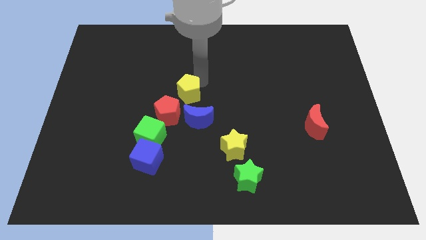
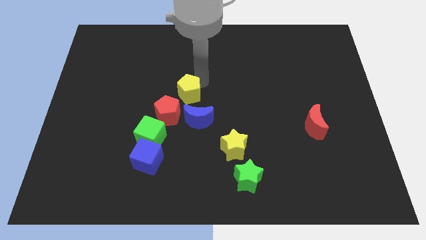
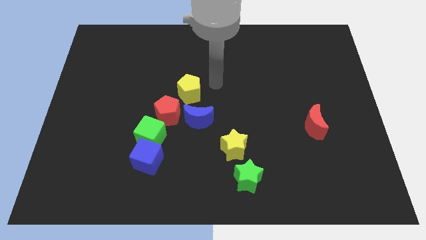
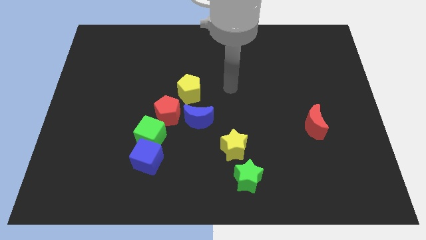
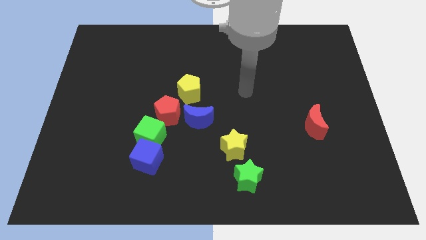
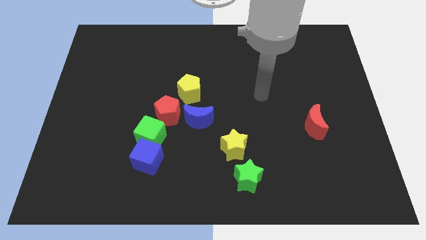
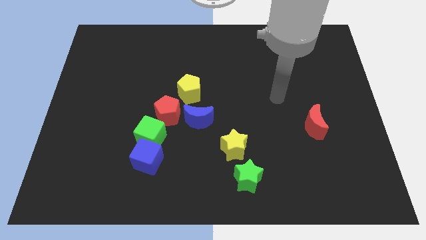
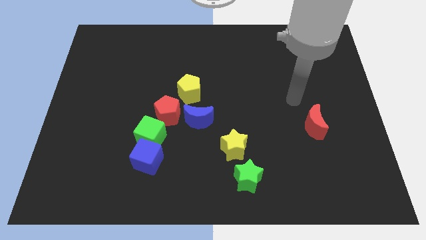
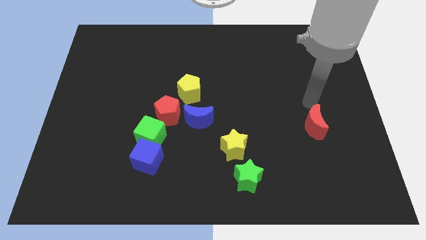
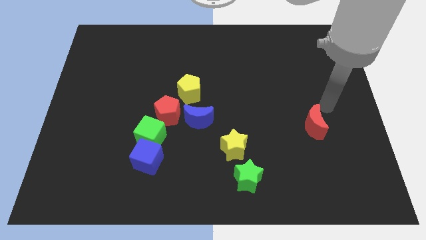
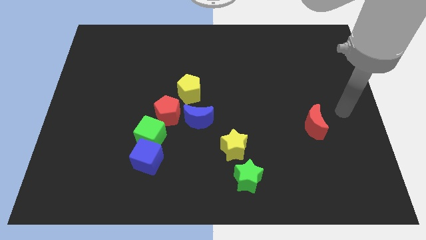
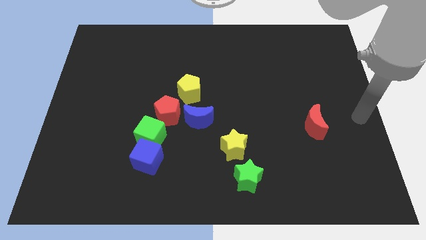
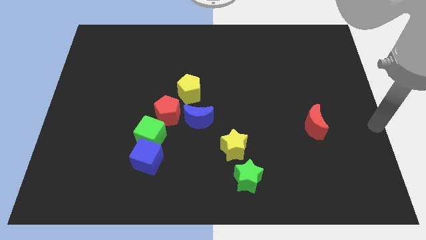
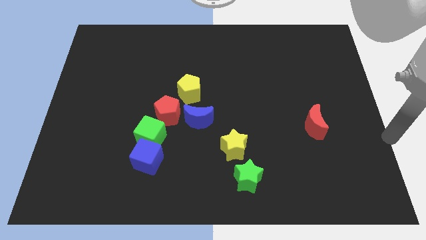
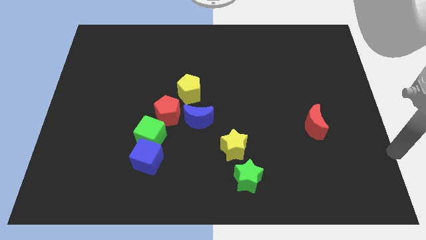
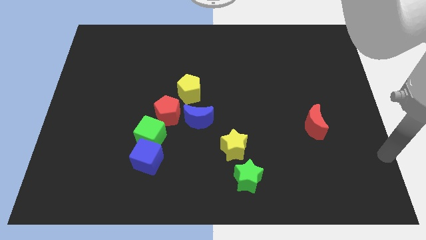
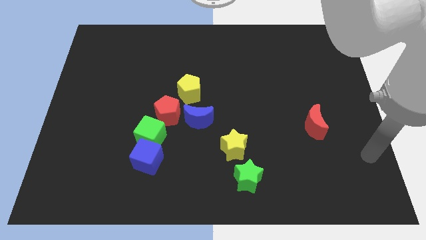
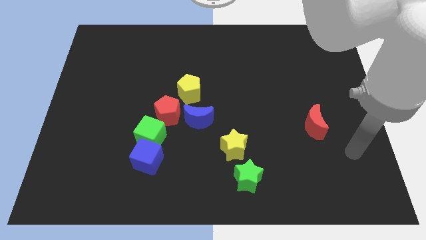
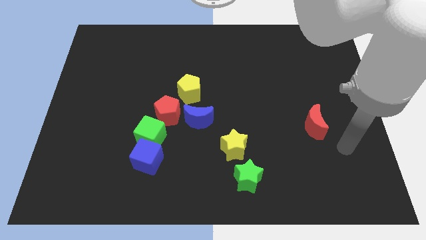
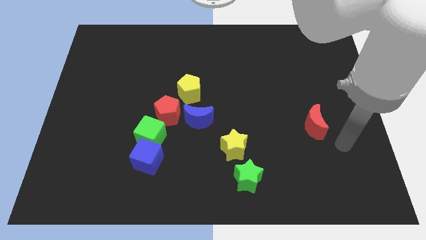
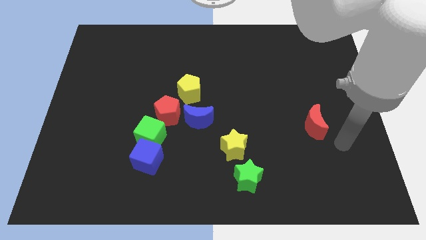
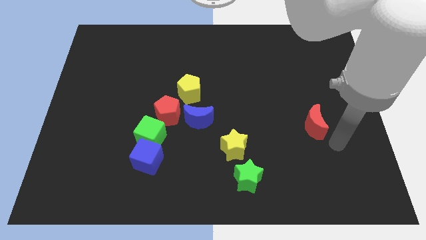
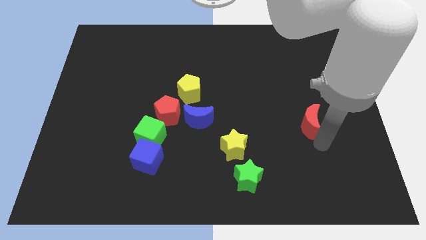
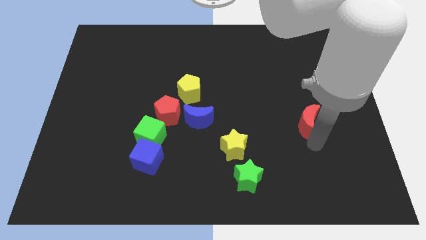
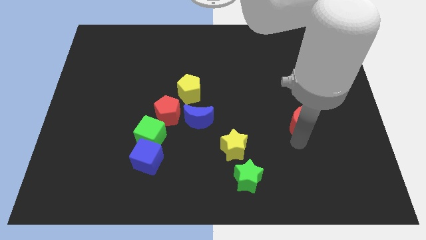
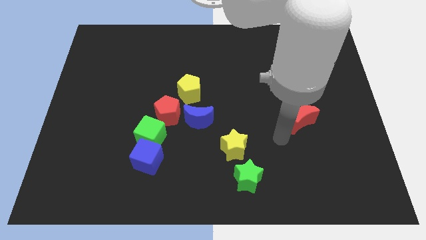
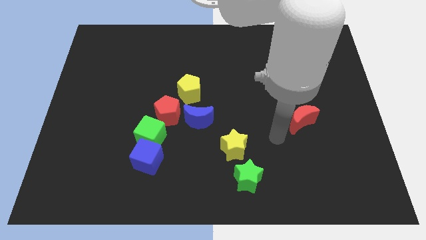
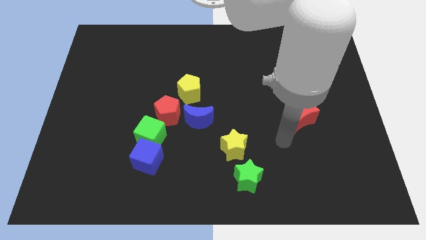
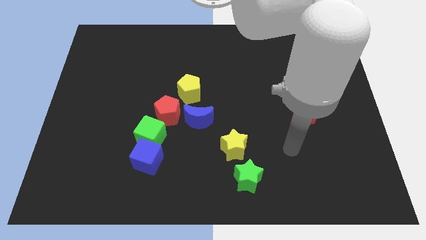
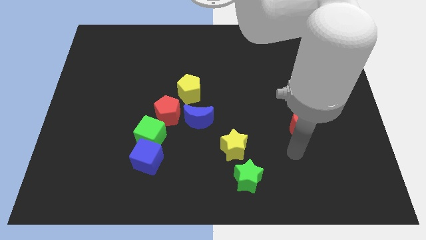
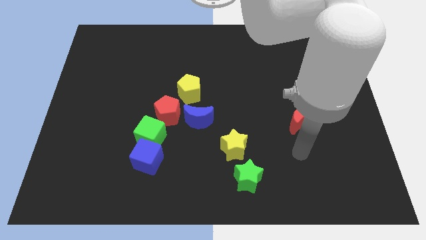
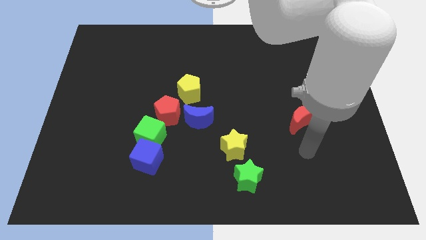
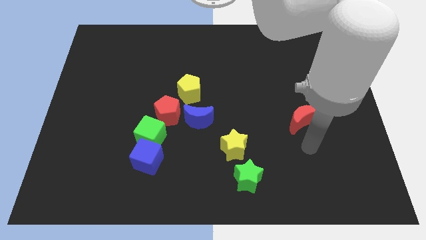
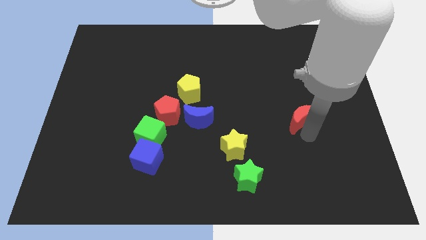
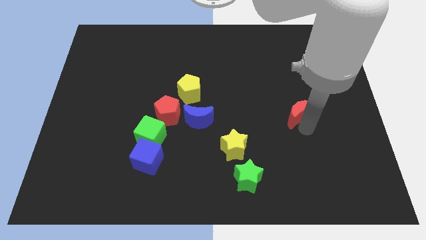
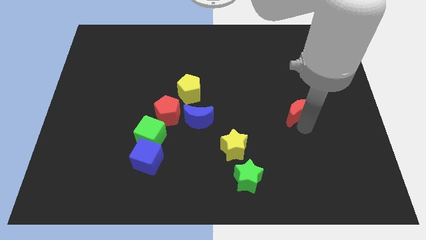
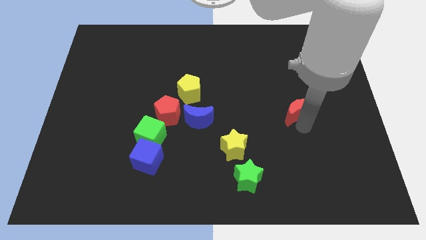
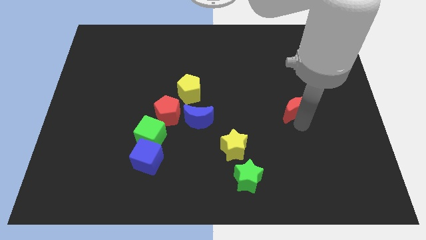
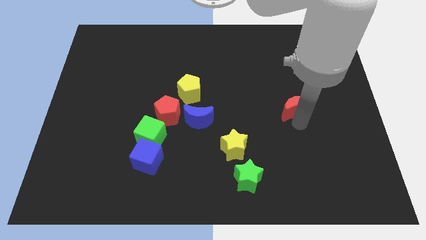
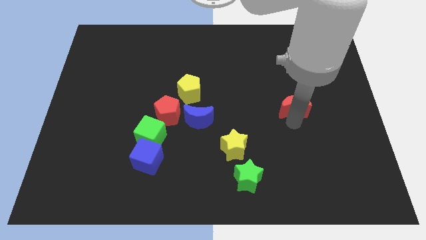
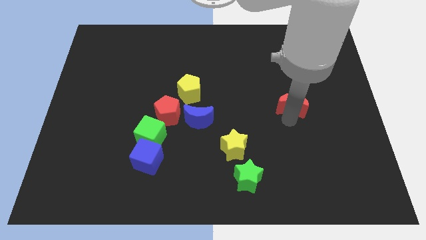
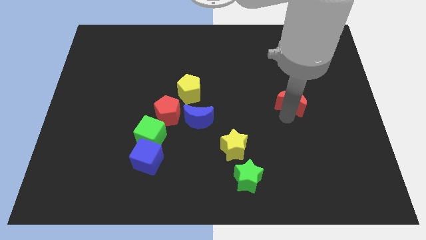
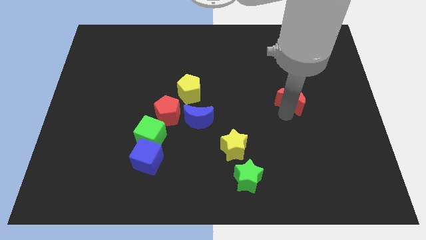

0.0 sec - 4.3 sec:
push the red crescent towards the top side of the board

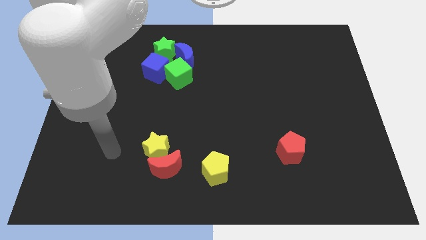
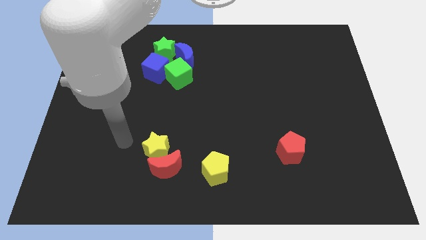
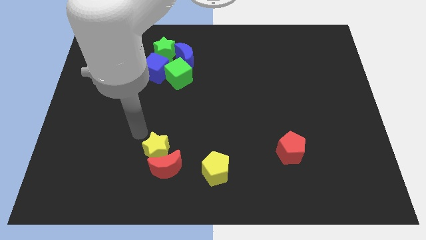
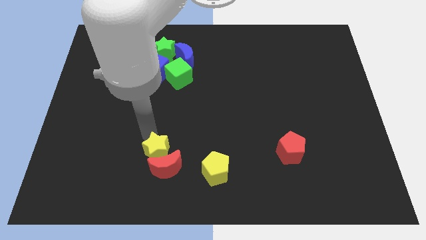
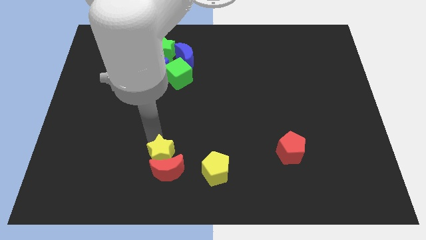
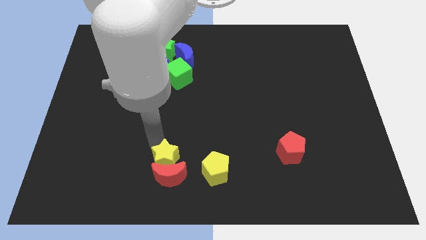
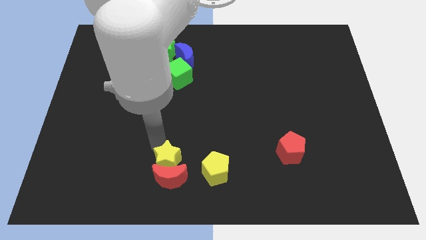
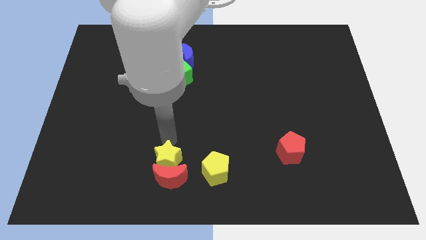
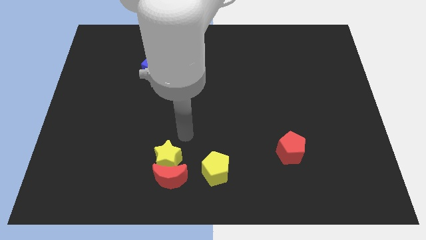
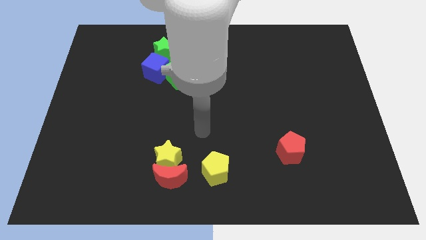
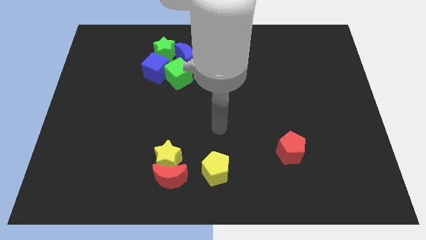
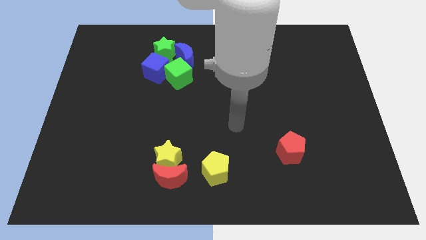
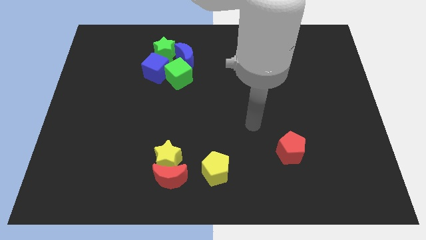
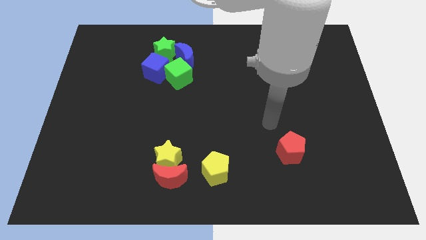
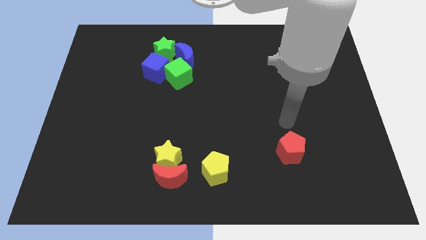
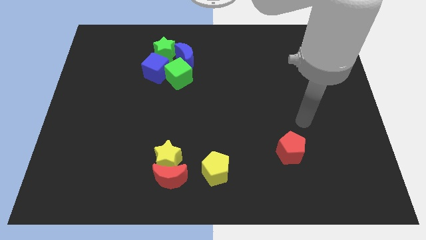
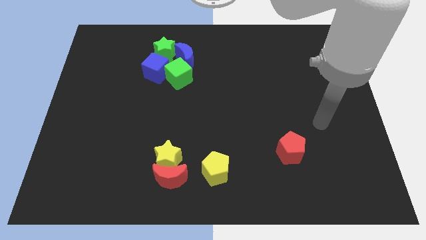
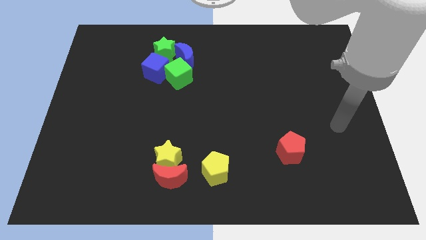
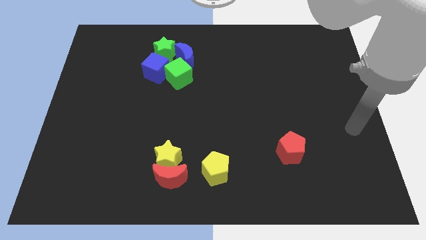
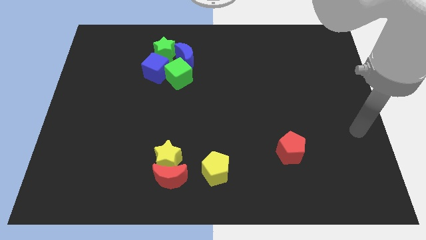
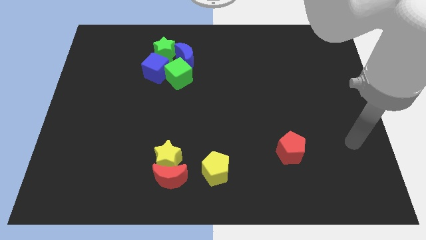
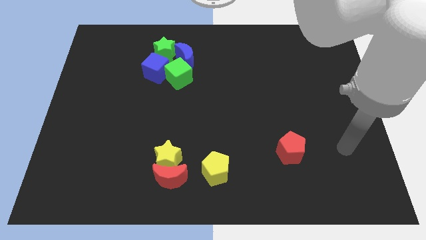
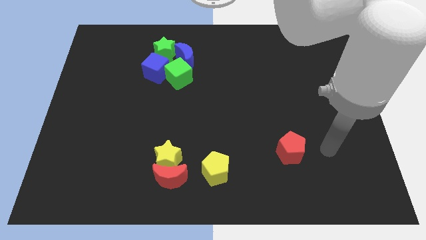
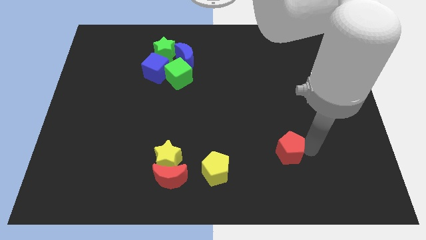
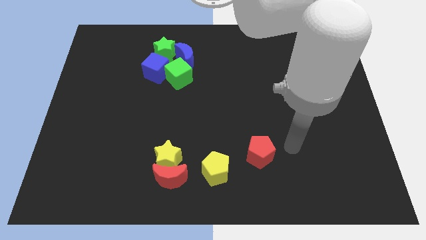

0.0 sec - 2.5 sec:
place your arm right side of red pentagon

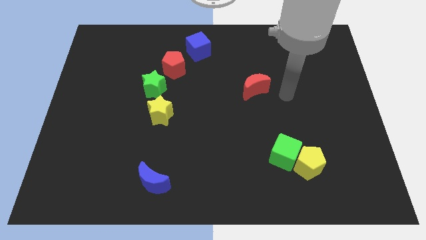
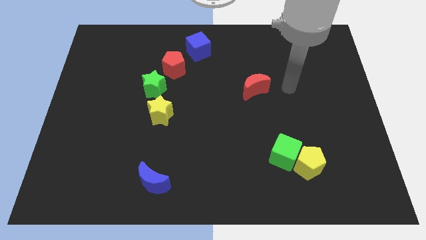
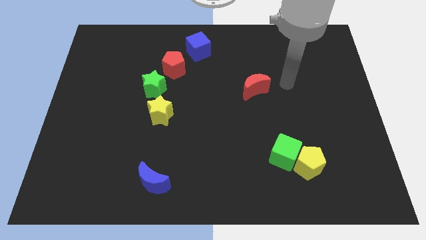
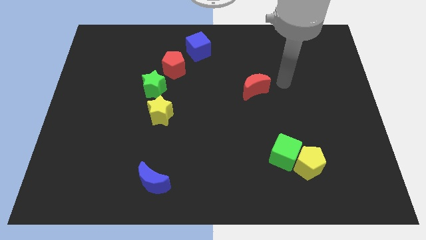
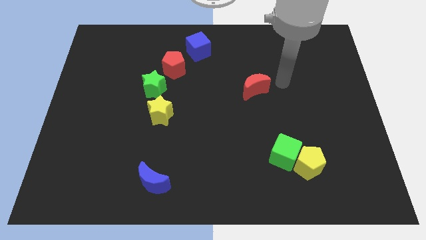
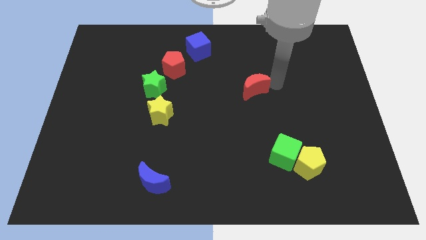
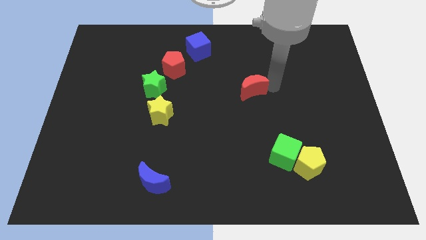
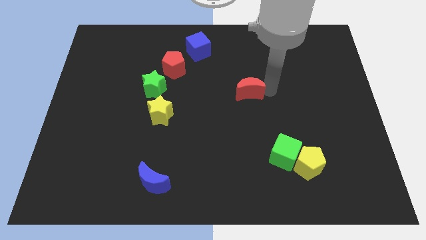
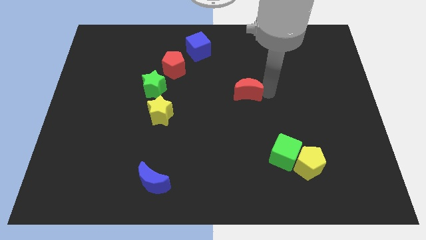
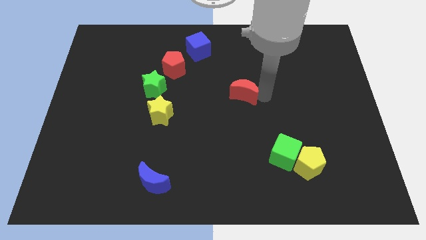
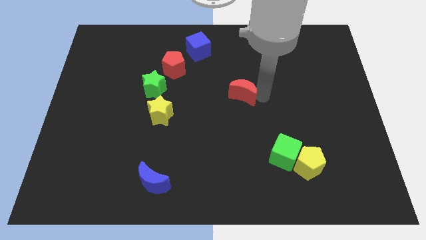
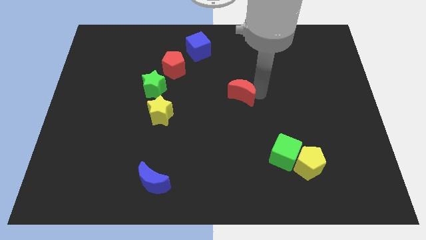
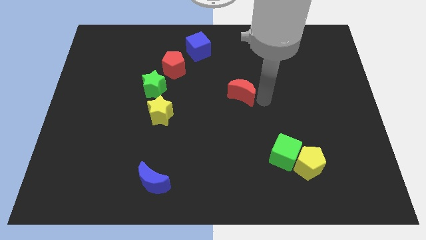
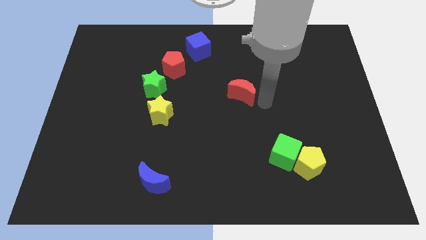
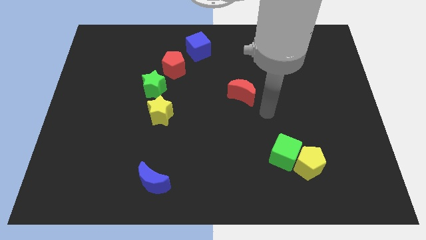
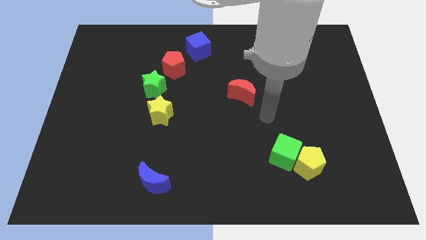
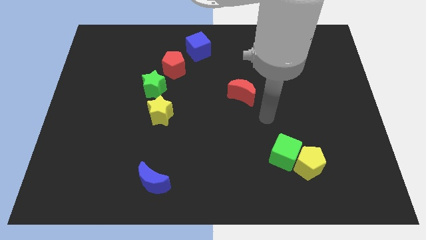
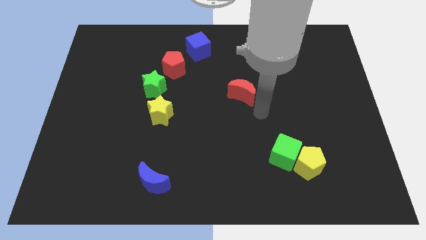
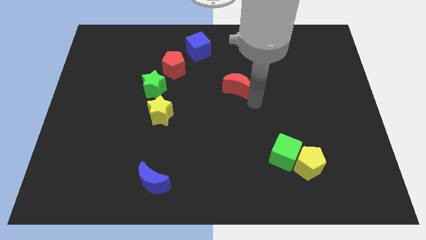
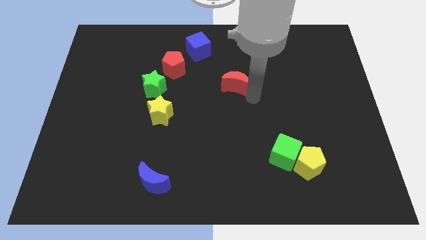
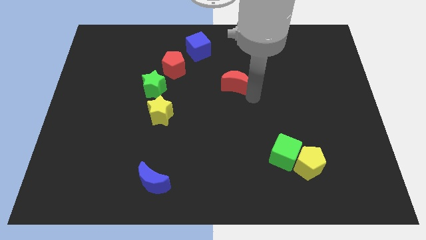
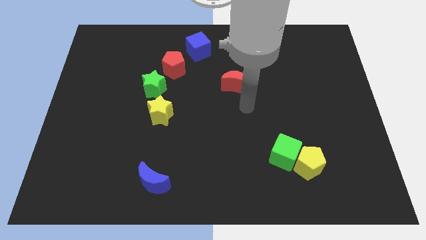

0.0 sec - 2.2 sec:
move the red crescent parallel to the green star
